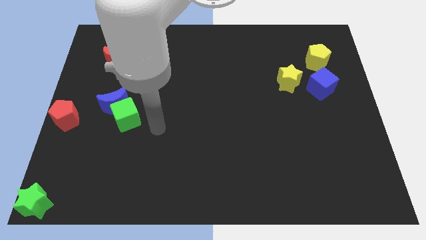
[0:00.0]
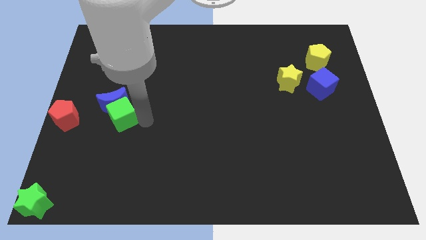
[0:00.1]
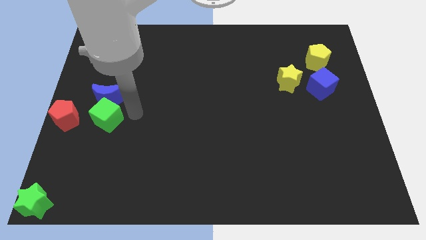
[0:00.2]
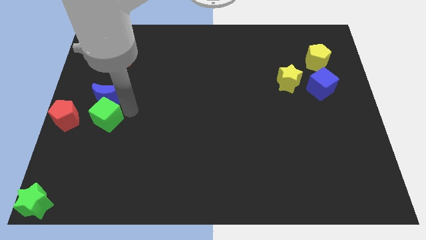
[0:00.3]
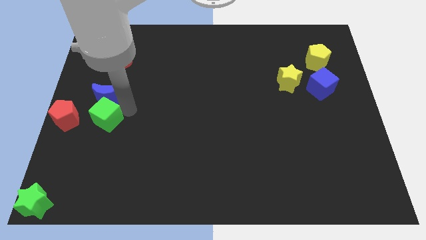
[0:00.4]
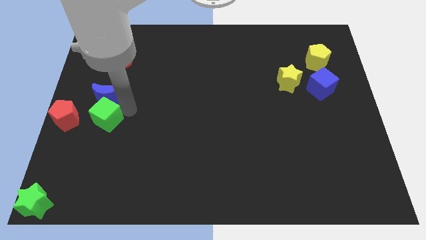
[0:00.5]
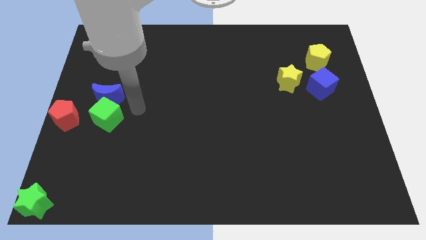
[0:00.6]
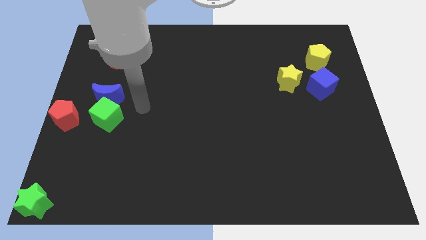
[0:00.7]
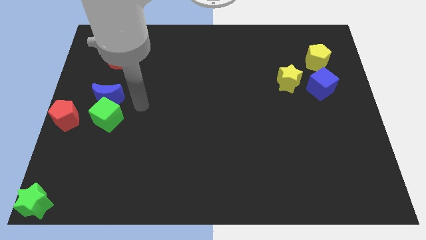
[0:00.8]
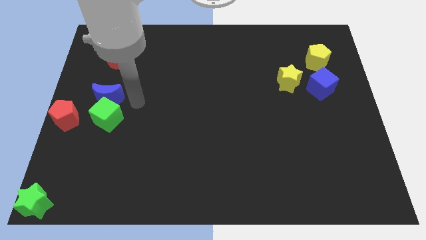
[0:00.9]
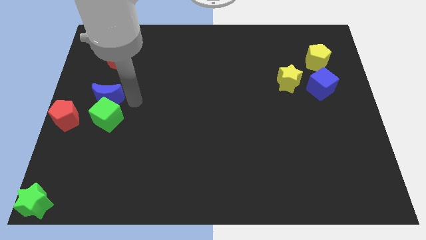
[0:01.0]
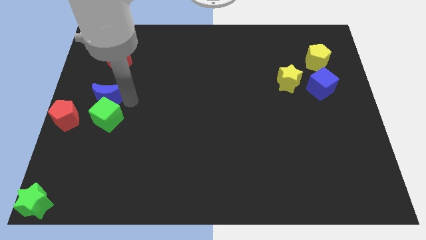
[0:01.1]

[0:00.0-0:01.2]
move the green cube slightly to the right side of the red pentagon

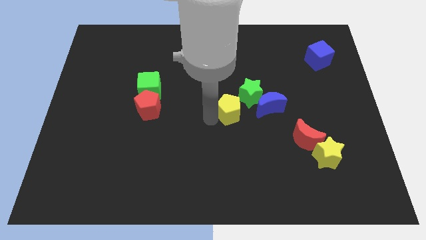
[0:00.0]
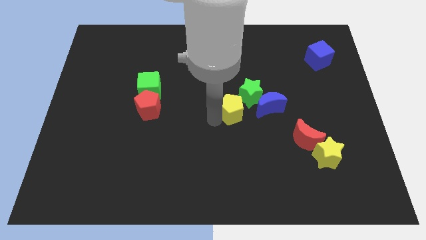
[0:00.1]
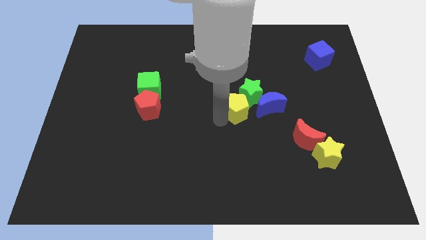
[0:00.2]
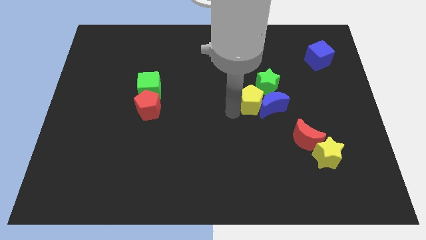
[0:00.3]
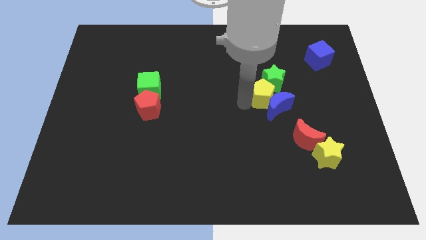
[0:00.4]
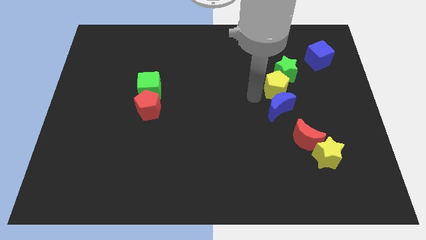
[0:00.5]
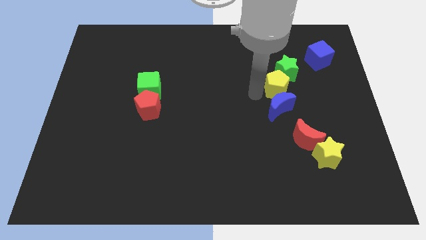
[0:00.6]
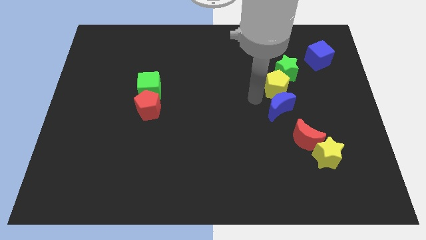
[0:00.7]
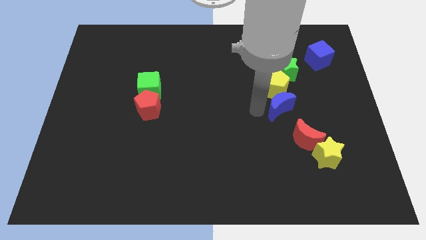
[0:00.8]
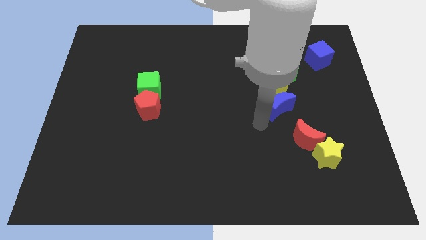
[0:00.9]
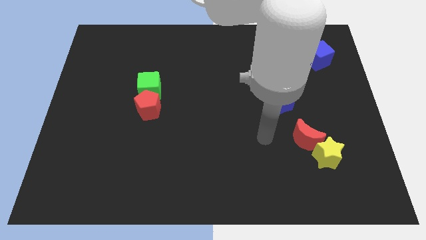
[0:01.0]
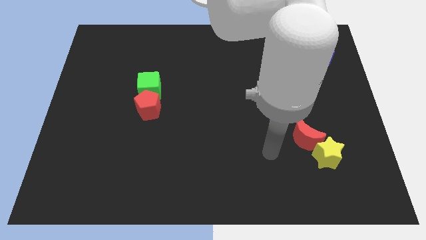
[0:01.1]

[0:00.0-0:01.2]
push the green star towards the top right corner with yellow pentagon

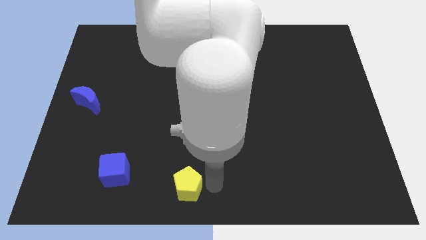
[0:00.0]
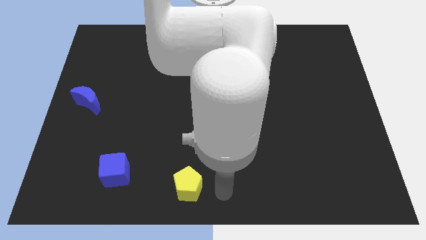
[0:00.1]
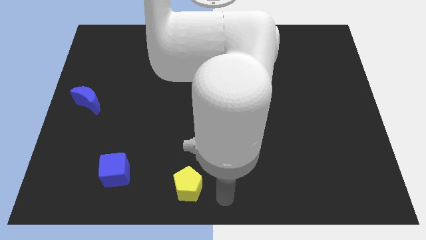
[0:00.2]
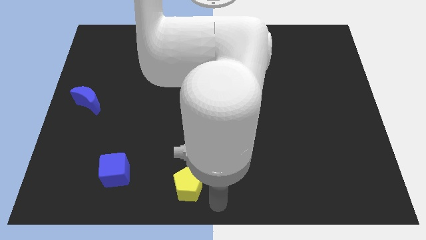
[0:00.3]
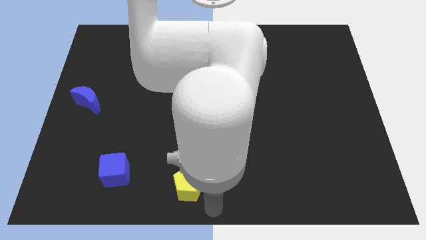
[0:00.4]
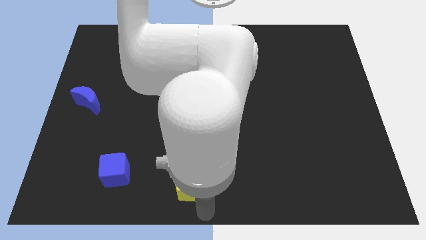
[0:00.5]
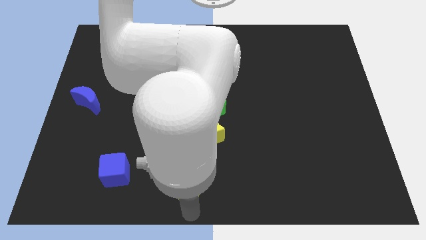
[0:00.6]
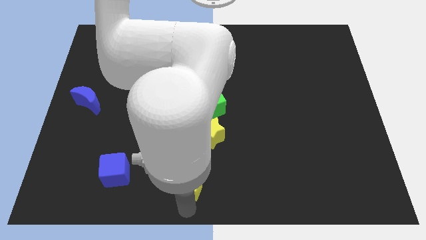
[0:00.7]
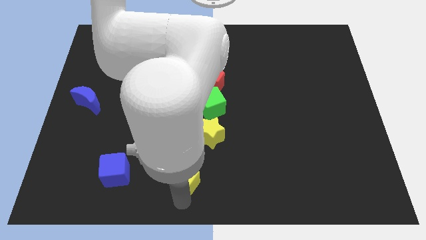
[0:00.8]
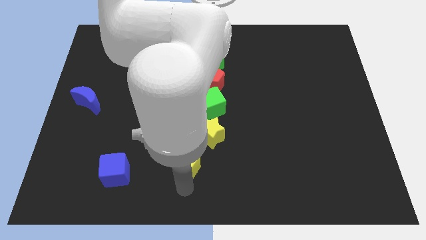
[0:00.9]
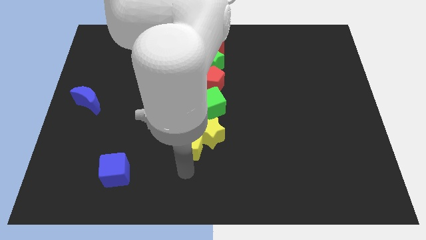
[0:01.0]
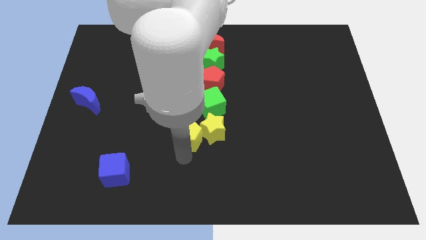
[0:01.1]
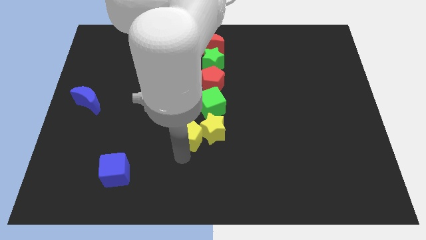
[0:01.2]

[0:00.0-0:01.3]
move the yellow pentagon to the left of the yellow star

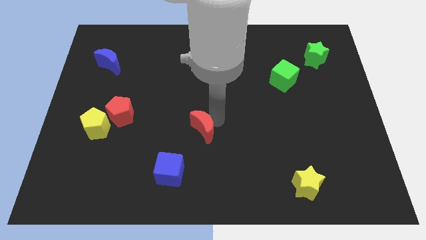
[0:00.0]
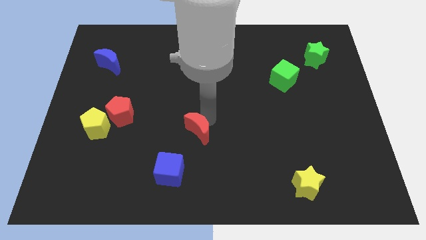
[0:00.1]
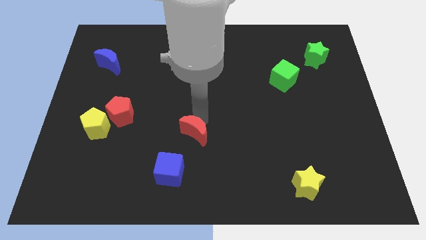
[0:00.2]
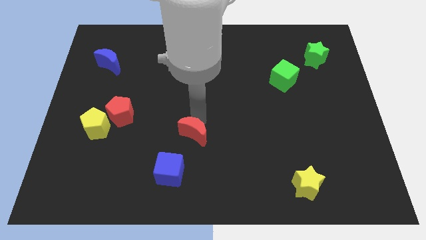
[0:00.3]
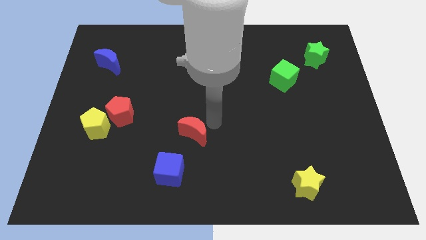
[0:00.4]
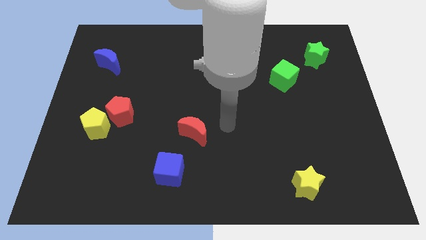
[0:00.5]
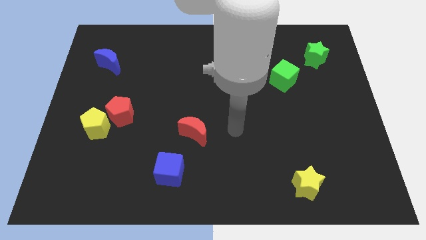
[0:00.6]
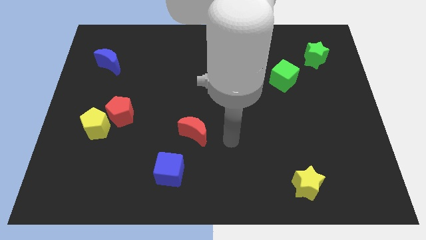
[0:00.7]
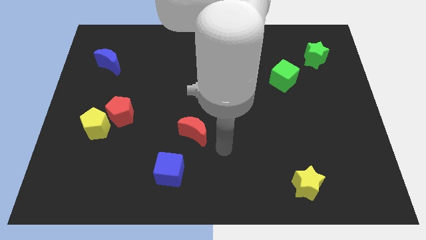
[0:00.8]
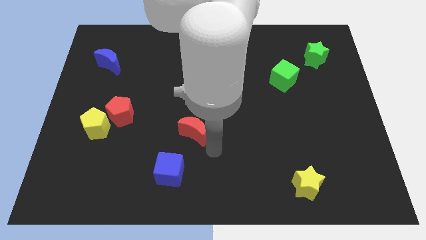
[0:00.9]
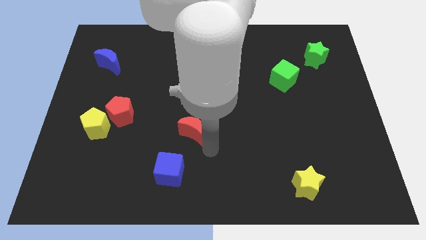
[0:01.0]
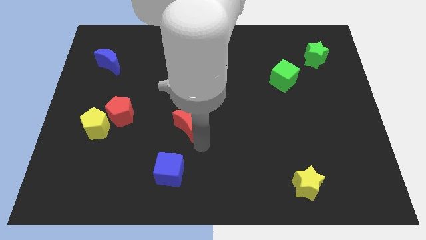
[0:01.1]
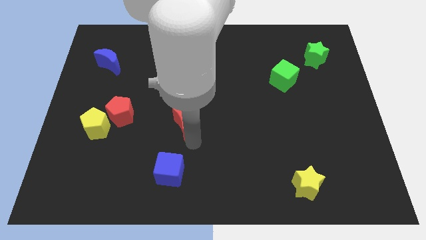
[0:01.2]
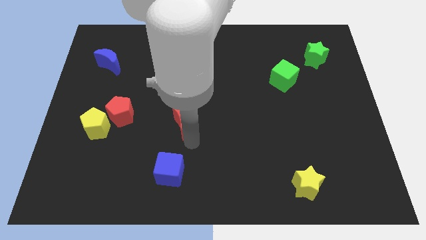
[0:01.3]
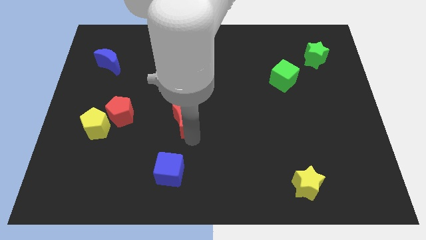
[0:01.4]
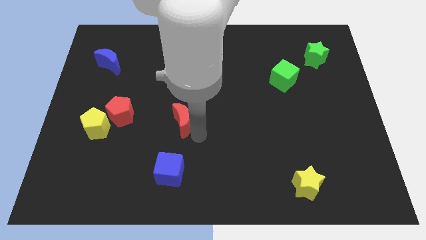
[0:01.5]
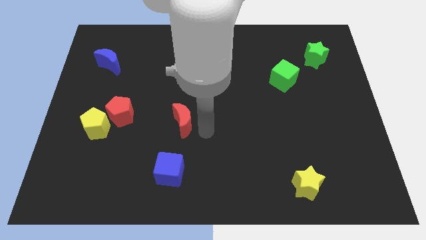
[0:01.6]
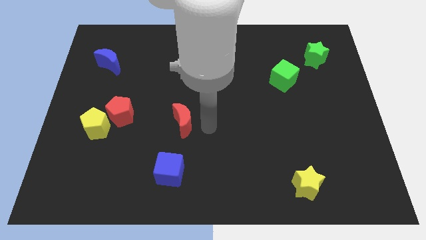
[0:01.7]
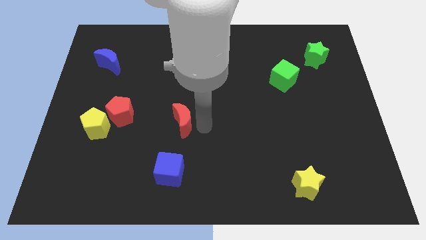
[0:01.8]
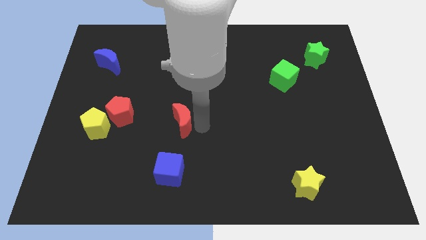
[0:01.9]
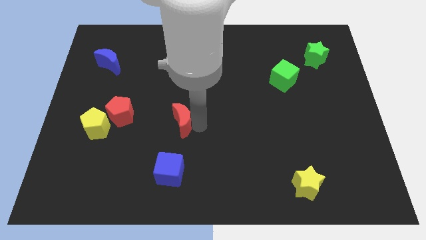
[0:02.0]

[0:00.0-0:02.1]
push red moon on top of blue cube

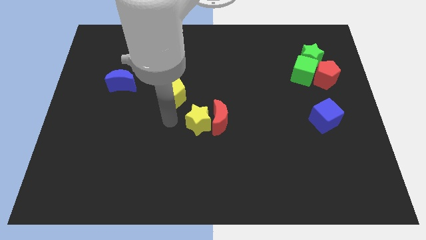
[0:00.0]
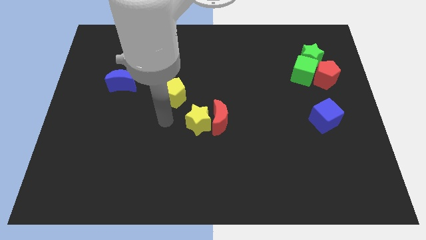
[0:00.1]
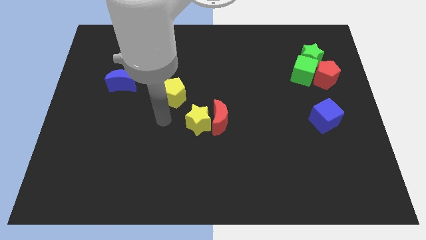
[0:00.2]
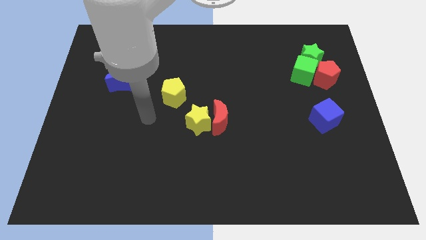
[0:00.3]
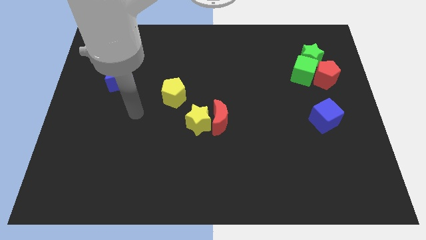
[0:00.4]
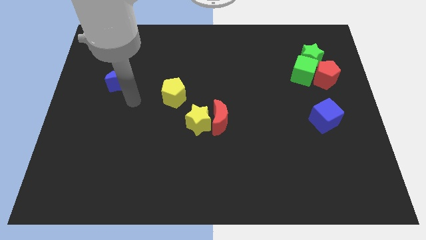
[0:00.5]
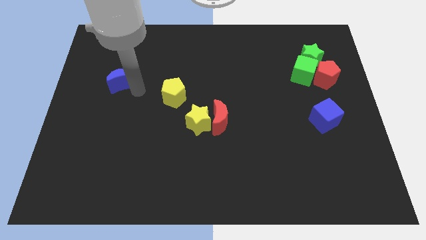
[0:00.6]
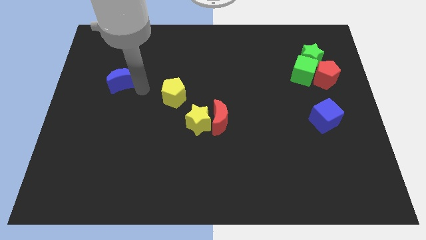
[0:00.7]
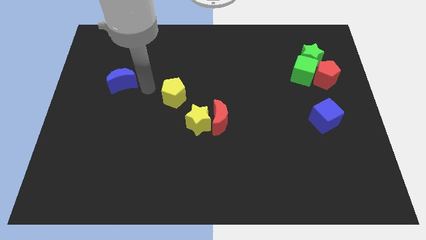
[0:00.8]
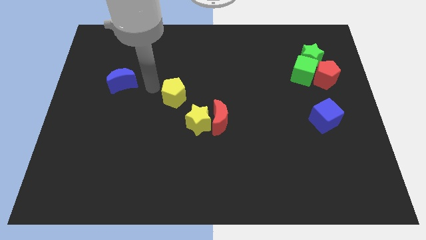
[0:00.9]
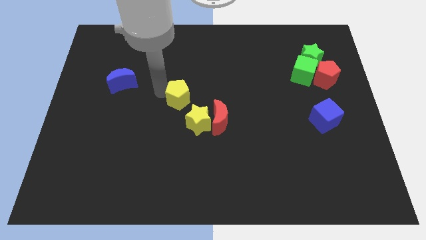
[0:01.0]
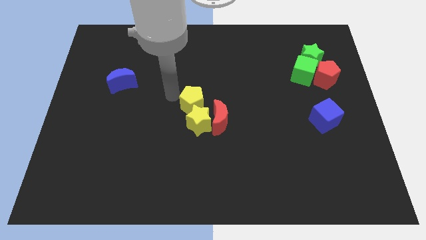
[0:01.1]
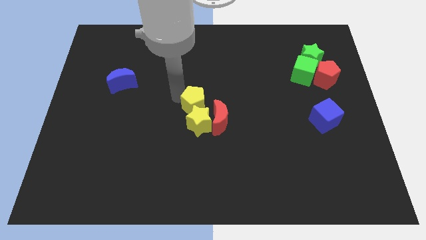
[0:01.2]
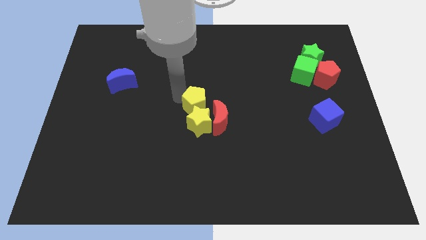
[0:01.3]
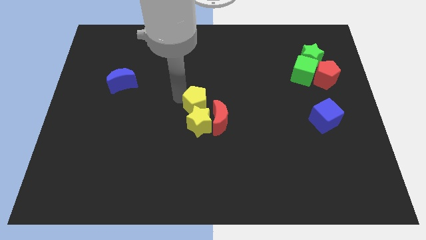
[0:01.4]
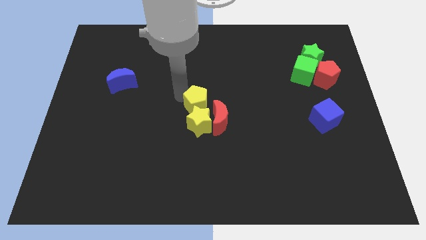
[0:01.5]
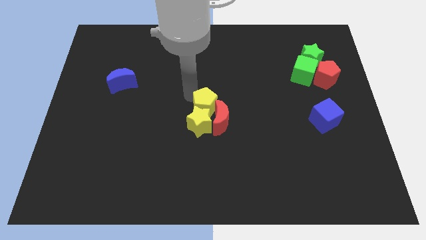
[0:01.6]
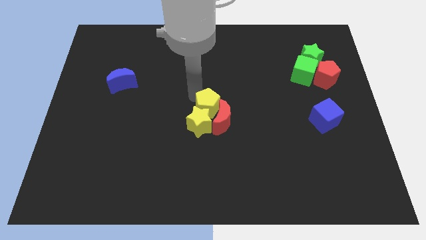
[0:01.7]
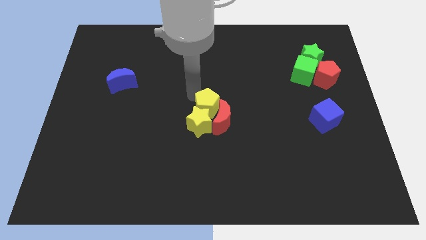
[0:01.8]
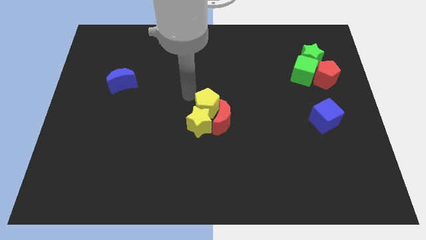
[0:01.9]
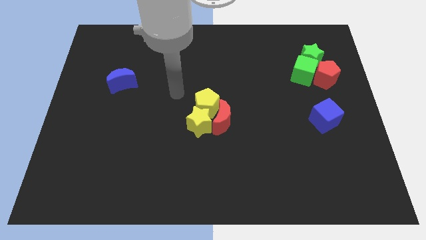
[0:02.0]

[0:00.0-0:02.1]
push the yellow star and yellow pentagon into the red crescent

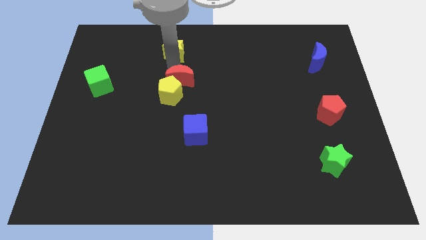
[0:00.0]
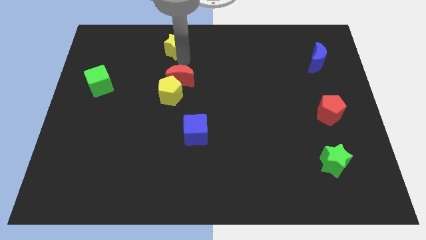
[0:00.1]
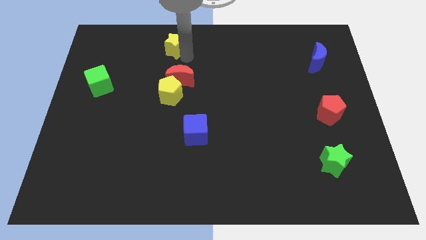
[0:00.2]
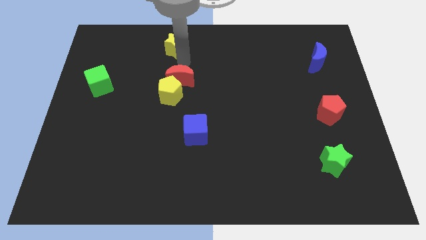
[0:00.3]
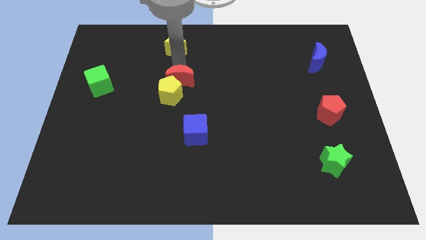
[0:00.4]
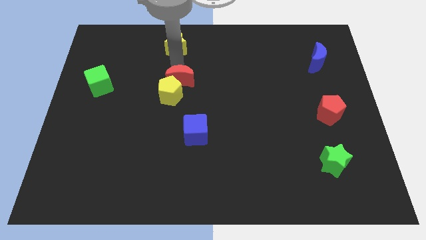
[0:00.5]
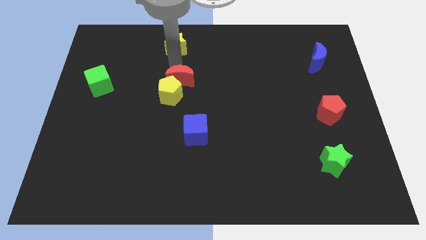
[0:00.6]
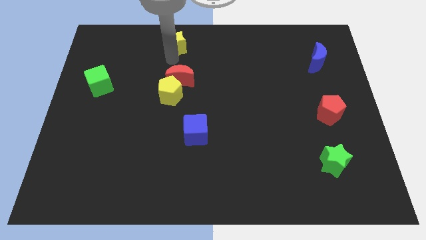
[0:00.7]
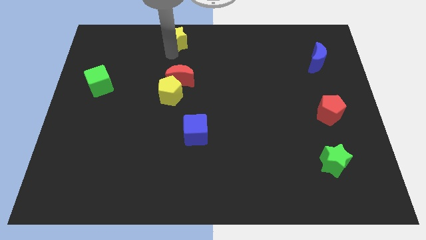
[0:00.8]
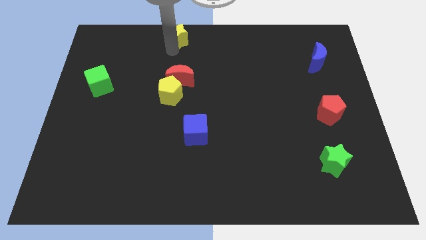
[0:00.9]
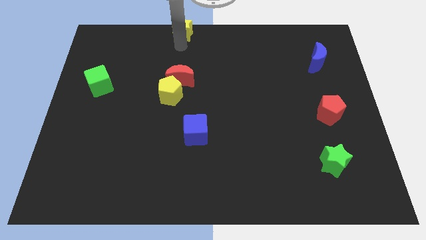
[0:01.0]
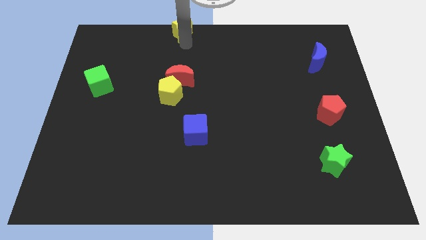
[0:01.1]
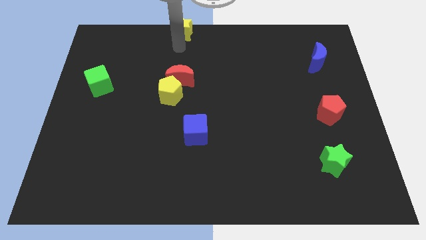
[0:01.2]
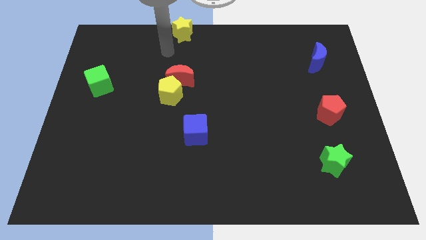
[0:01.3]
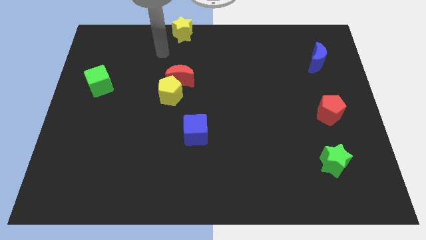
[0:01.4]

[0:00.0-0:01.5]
push the yellow star to the top
